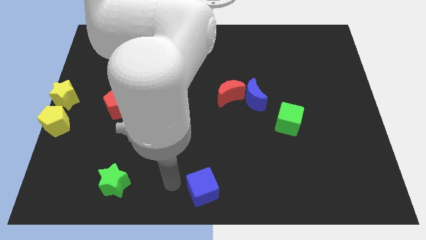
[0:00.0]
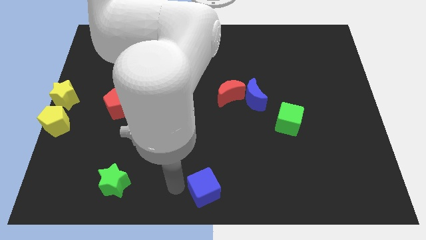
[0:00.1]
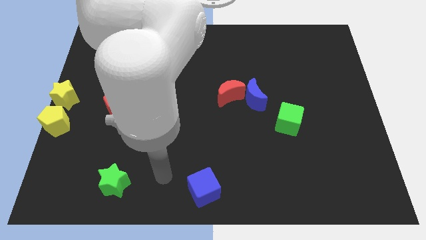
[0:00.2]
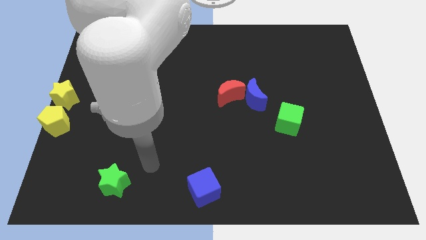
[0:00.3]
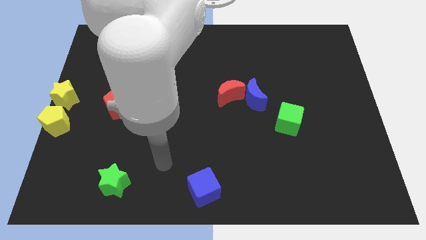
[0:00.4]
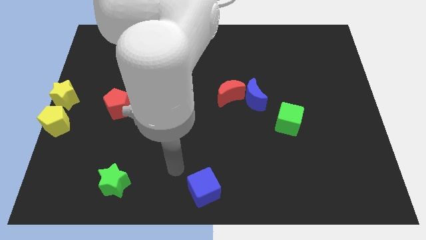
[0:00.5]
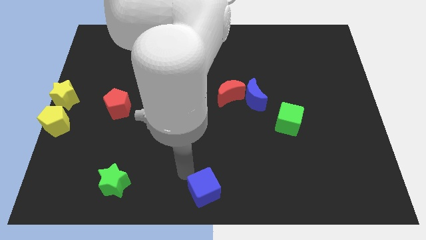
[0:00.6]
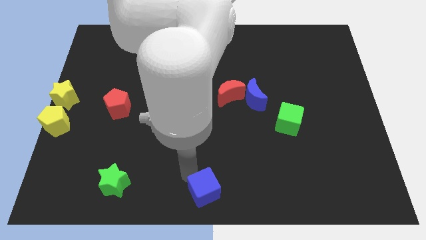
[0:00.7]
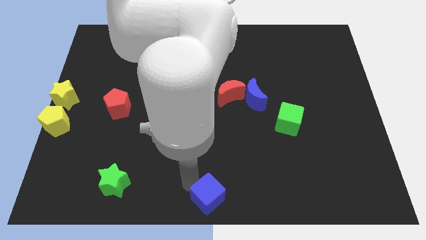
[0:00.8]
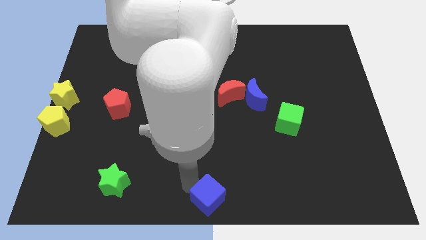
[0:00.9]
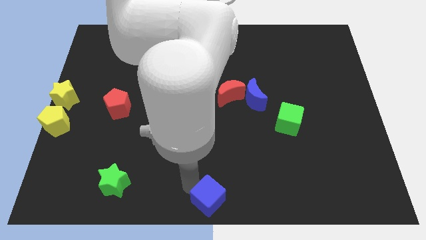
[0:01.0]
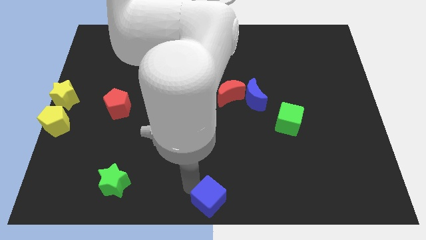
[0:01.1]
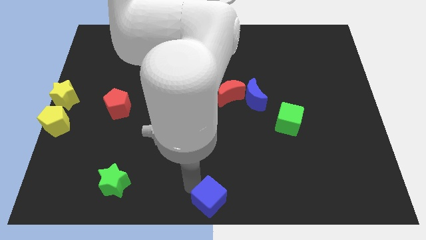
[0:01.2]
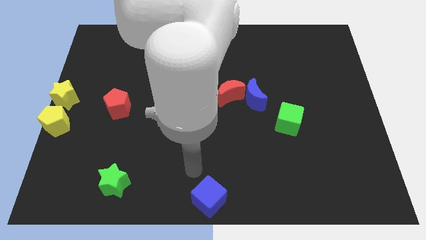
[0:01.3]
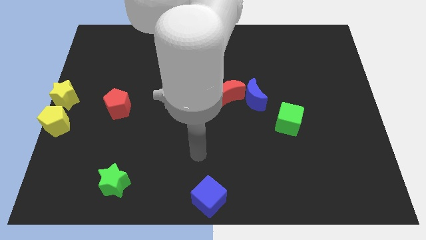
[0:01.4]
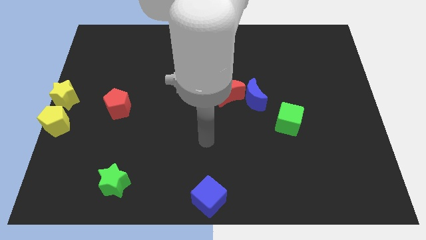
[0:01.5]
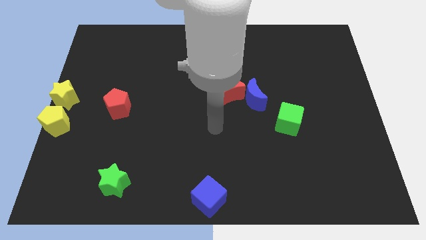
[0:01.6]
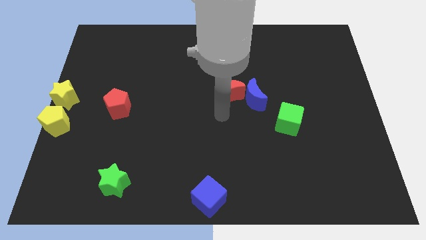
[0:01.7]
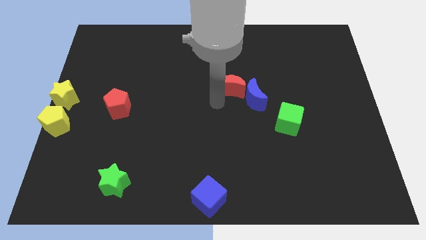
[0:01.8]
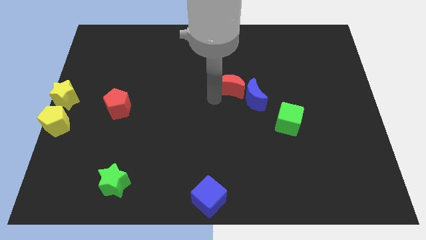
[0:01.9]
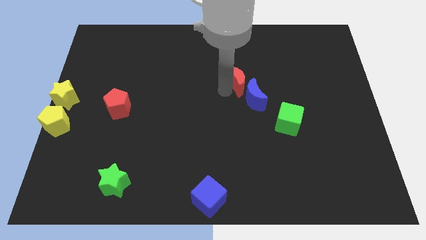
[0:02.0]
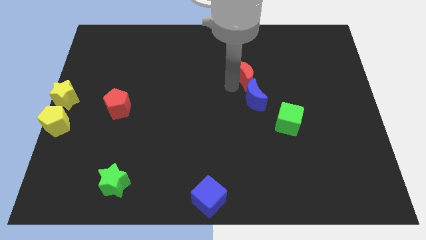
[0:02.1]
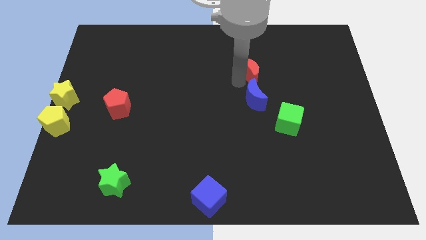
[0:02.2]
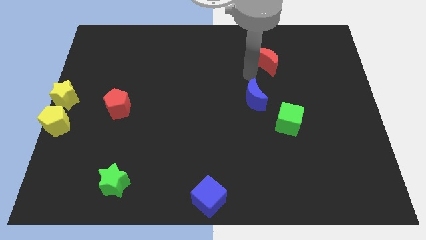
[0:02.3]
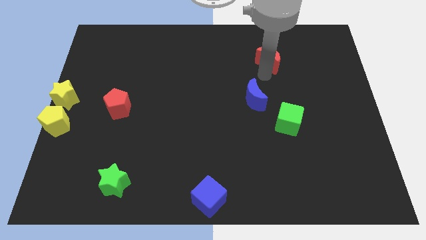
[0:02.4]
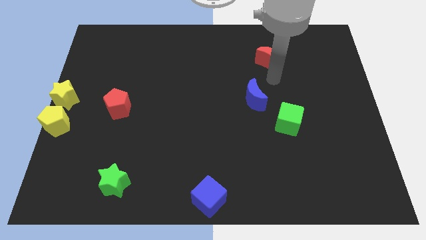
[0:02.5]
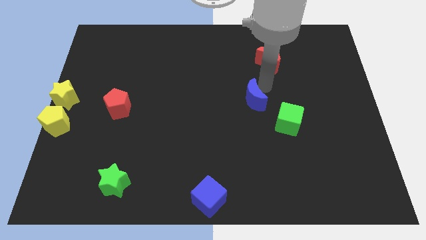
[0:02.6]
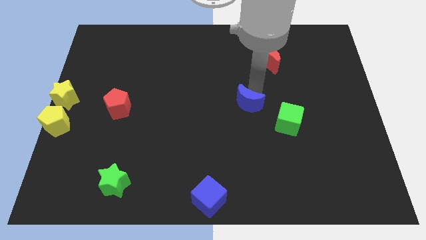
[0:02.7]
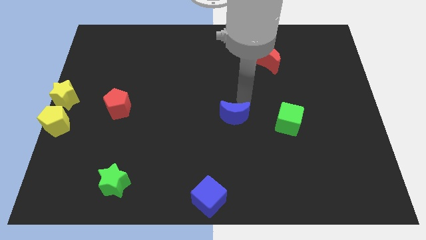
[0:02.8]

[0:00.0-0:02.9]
separate the blue moon and red moon

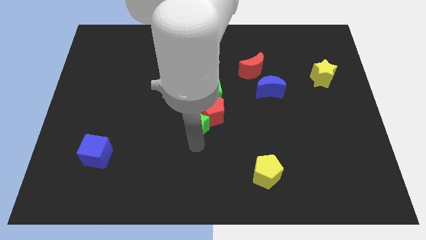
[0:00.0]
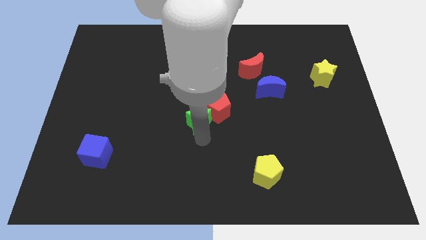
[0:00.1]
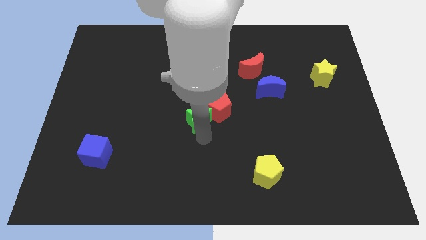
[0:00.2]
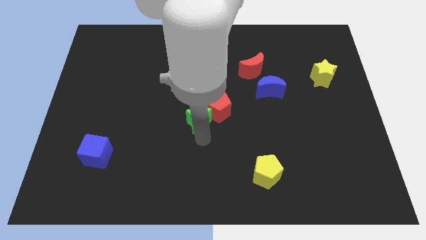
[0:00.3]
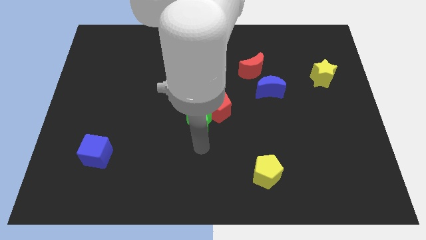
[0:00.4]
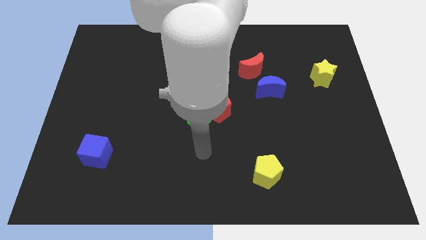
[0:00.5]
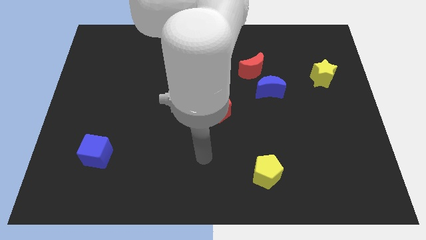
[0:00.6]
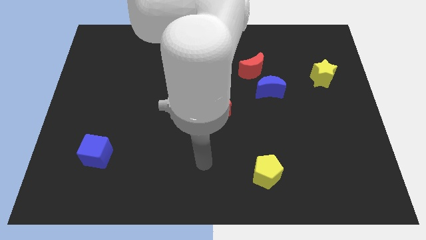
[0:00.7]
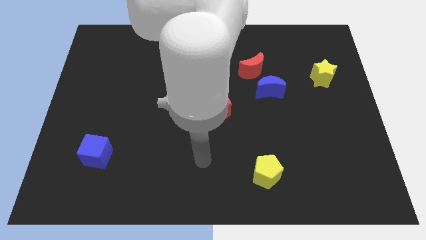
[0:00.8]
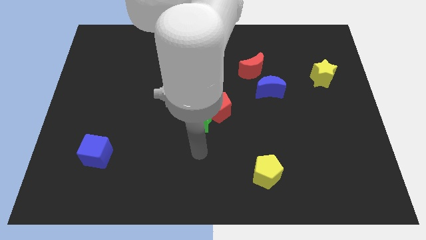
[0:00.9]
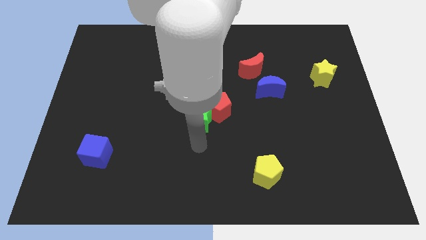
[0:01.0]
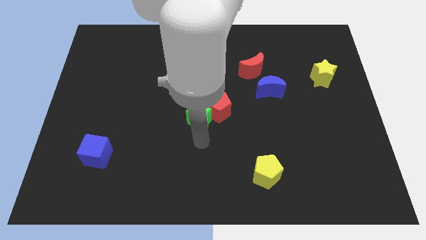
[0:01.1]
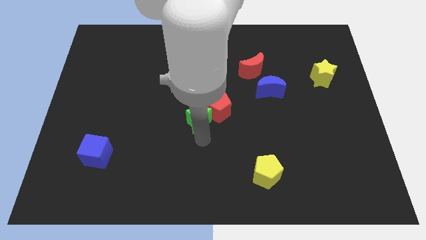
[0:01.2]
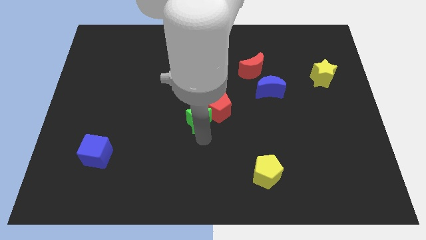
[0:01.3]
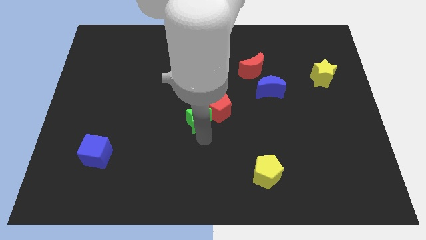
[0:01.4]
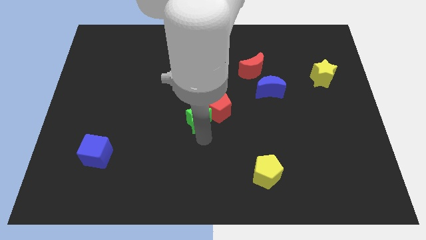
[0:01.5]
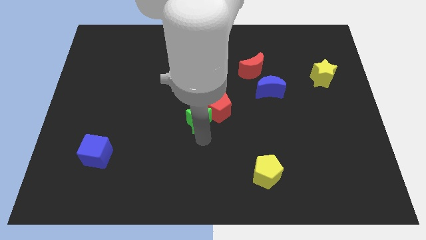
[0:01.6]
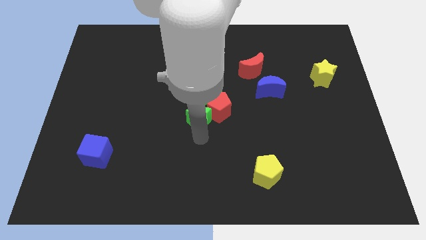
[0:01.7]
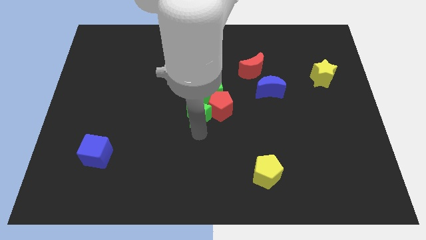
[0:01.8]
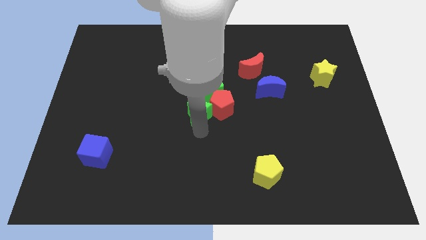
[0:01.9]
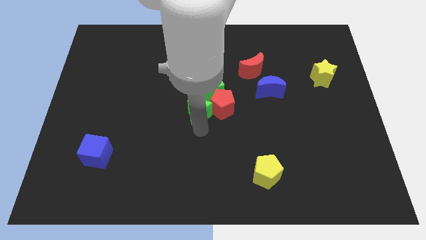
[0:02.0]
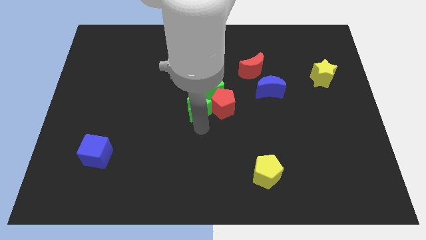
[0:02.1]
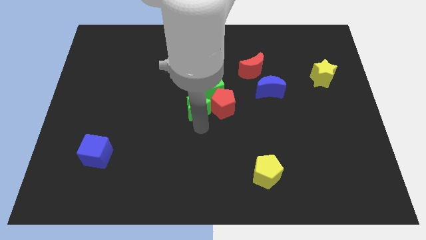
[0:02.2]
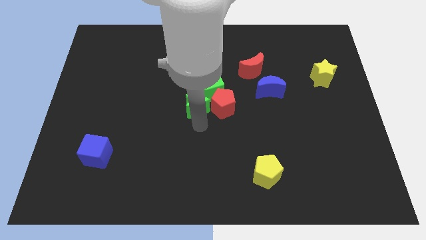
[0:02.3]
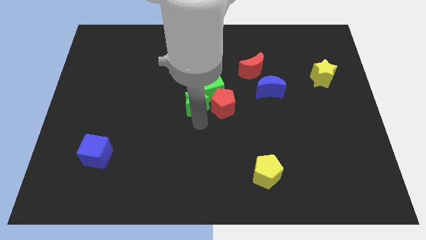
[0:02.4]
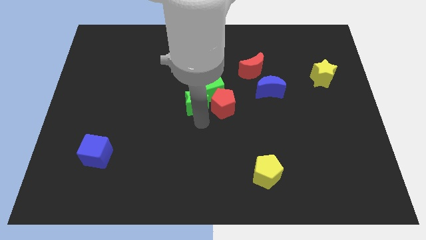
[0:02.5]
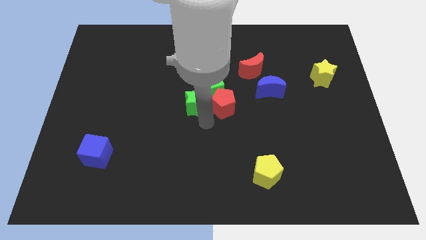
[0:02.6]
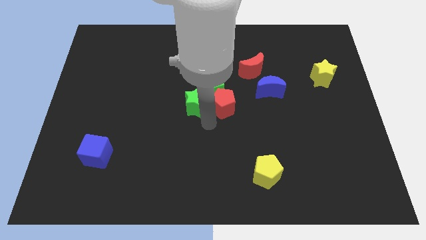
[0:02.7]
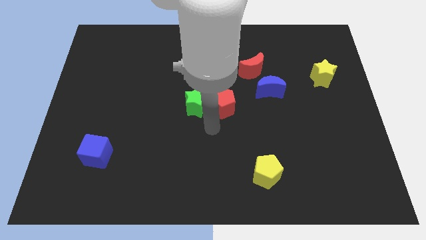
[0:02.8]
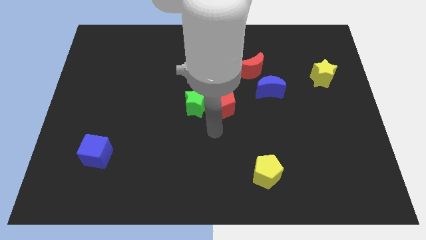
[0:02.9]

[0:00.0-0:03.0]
place the green star below the green cube

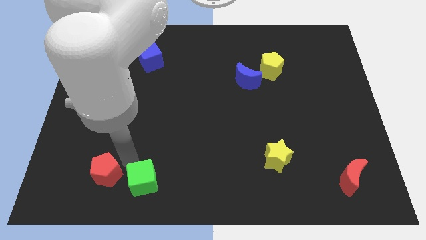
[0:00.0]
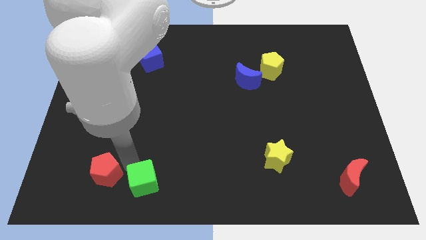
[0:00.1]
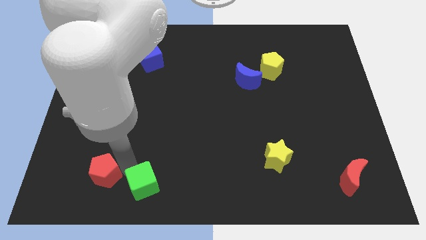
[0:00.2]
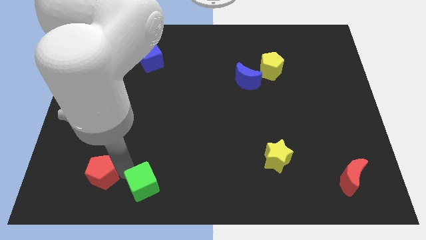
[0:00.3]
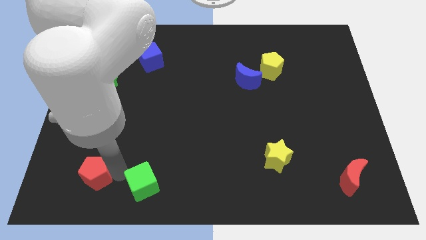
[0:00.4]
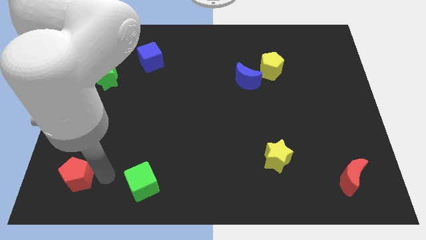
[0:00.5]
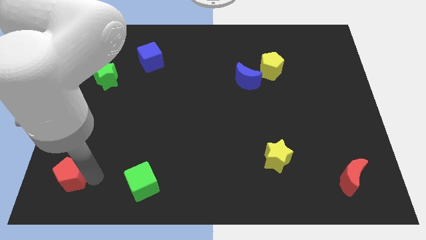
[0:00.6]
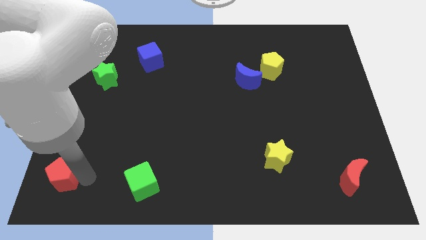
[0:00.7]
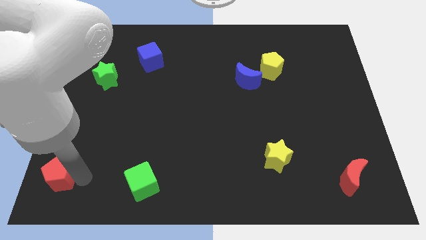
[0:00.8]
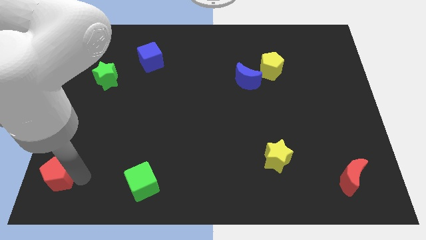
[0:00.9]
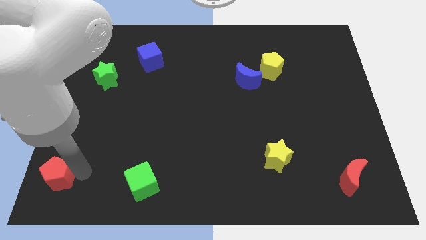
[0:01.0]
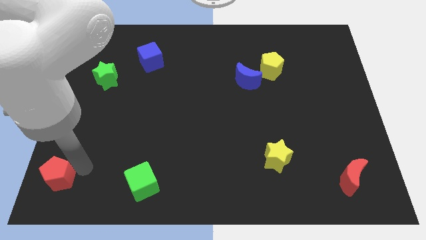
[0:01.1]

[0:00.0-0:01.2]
push the red pentagon towards the left side of the board

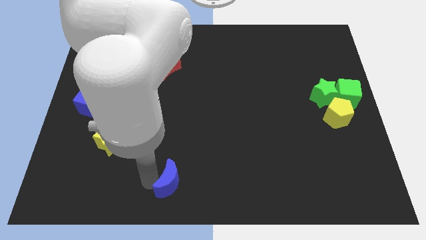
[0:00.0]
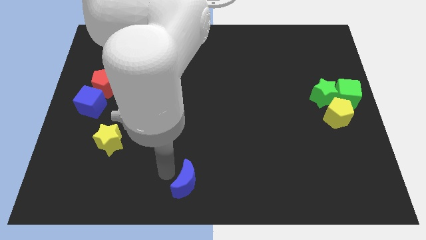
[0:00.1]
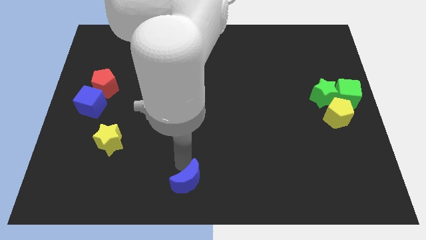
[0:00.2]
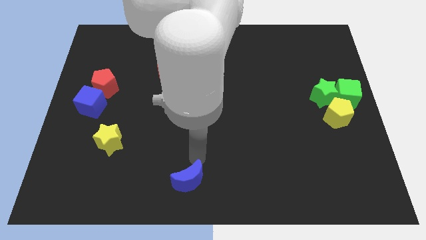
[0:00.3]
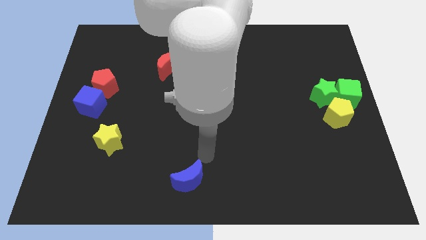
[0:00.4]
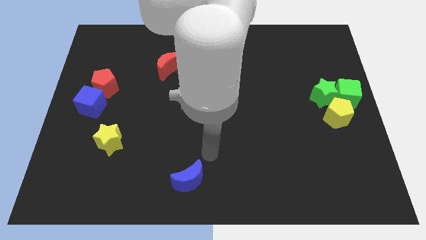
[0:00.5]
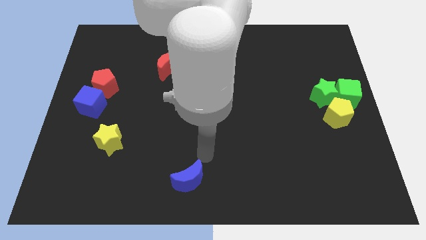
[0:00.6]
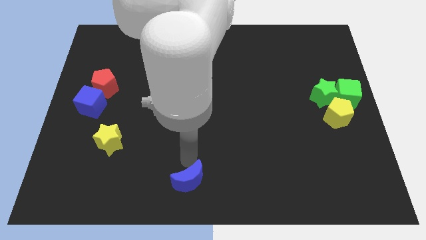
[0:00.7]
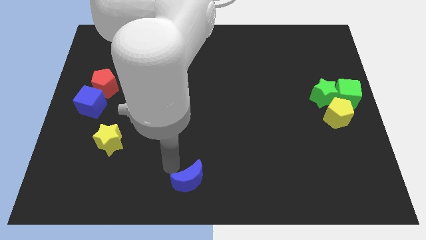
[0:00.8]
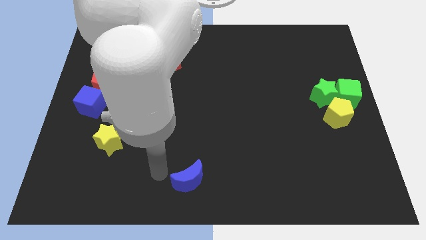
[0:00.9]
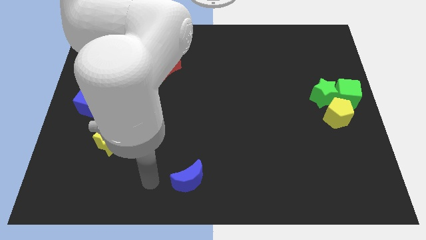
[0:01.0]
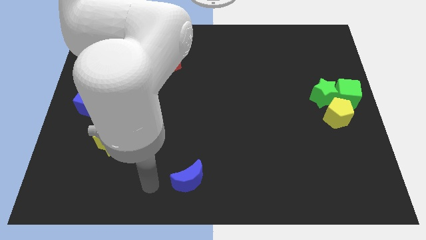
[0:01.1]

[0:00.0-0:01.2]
push the blue crescent to the right

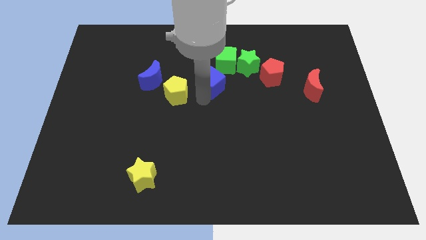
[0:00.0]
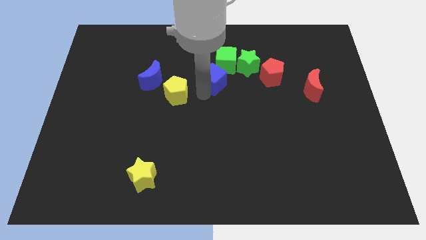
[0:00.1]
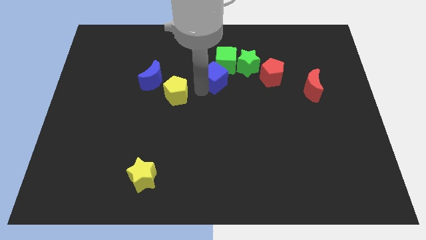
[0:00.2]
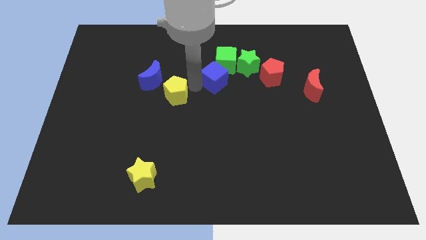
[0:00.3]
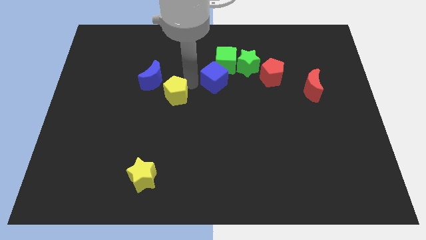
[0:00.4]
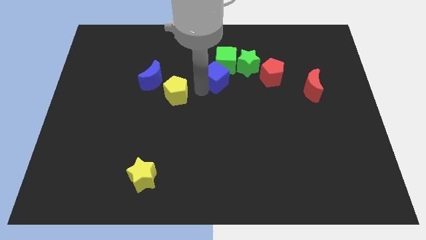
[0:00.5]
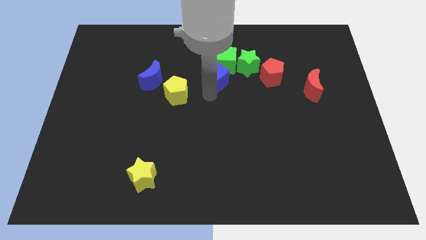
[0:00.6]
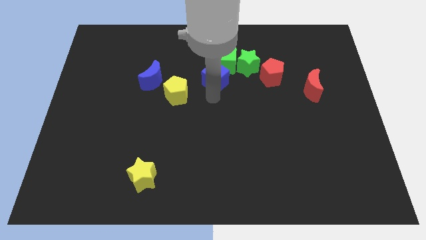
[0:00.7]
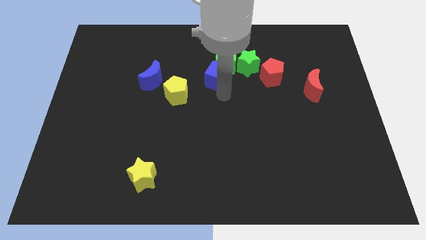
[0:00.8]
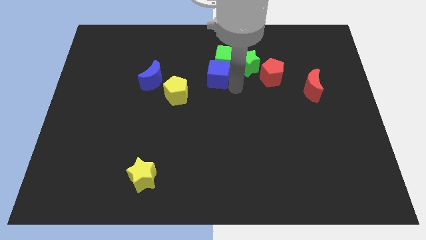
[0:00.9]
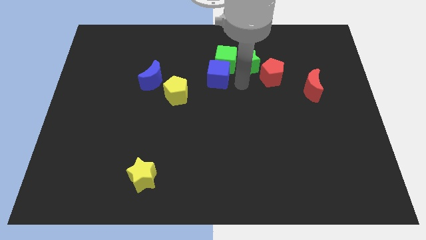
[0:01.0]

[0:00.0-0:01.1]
push blue cube in to green cube
